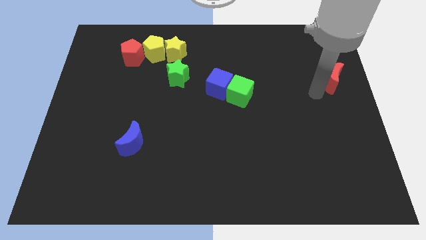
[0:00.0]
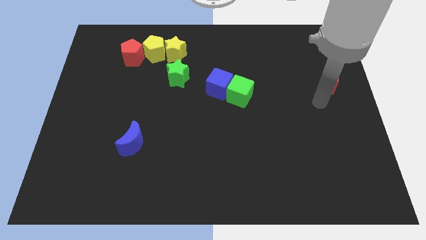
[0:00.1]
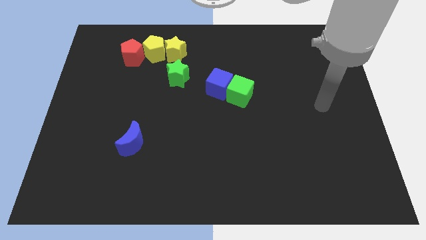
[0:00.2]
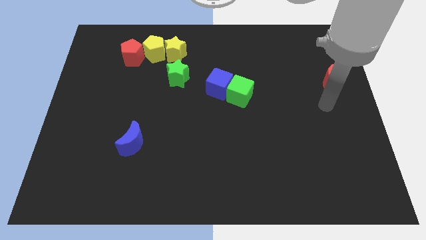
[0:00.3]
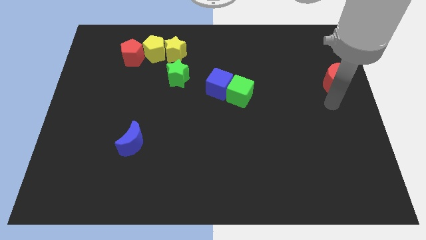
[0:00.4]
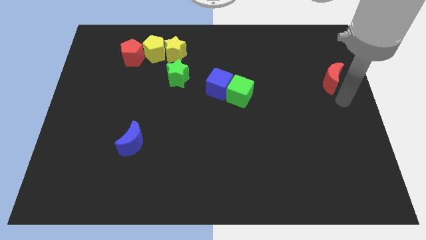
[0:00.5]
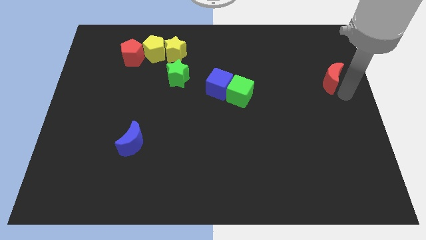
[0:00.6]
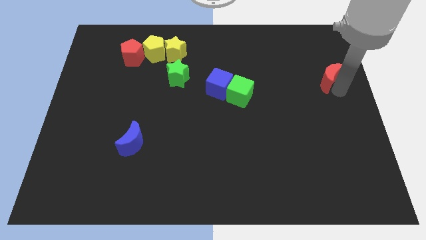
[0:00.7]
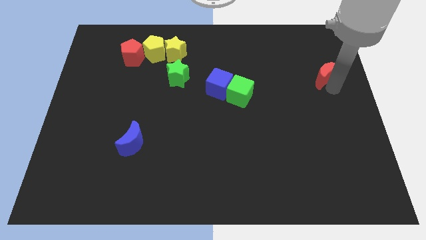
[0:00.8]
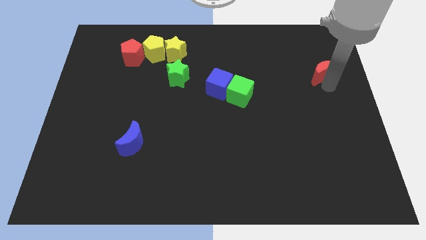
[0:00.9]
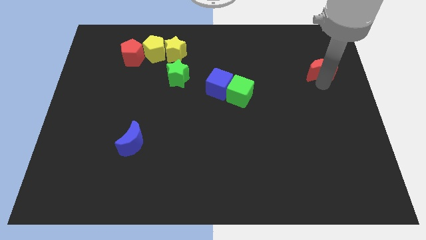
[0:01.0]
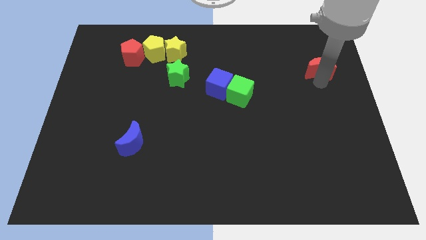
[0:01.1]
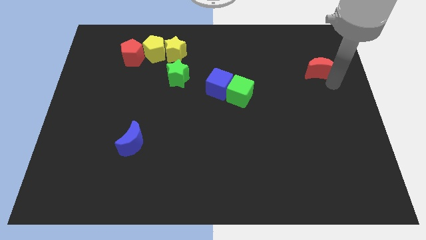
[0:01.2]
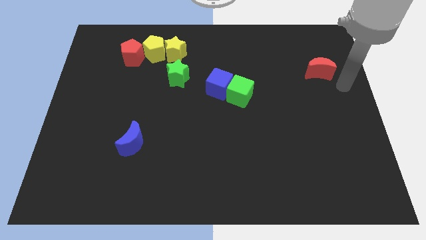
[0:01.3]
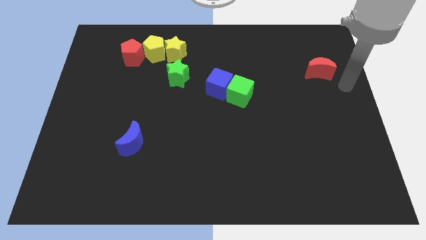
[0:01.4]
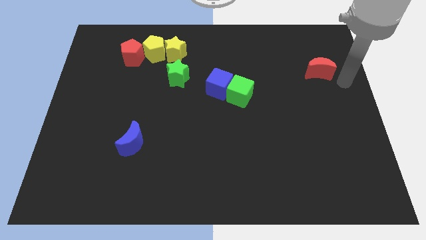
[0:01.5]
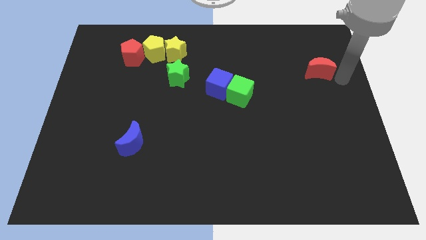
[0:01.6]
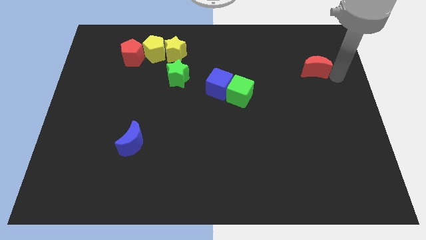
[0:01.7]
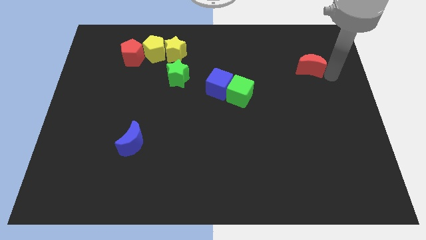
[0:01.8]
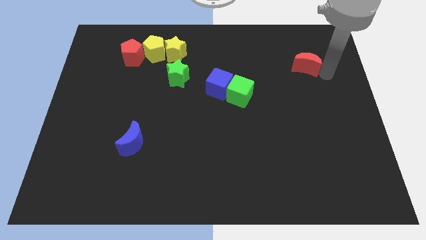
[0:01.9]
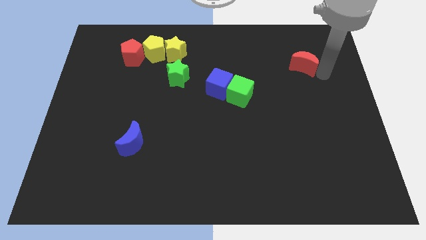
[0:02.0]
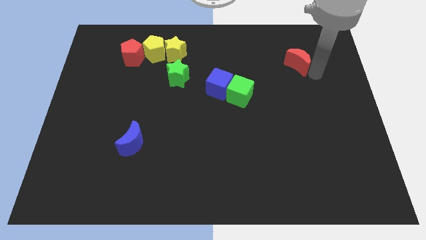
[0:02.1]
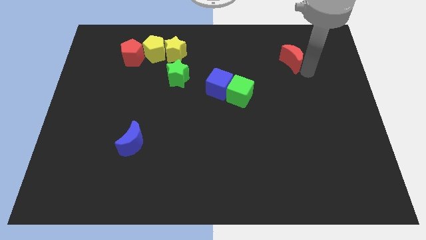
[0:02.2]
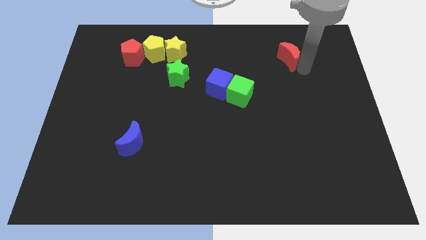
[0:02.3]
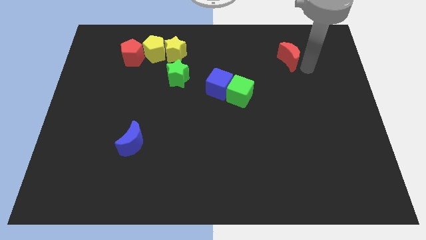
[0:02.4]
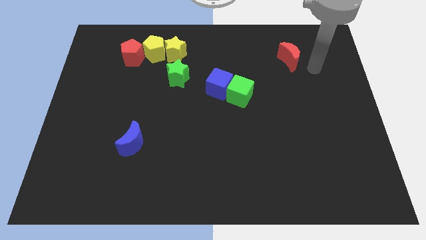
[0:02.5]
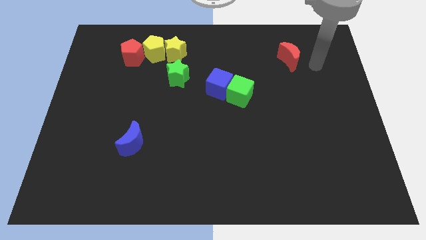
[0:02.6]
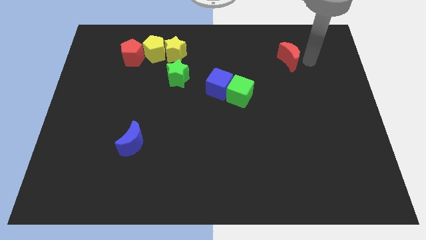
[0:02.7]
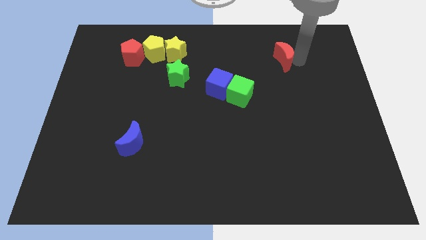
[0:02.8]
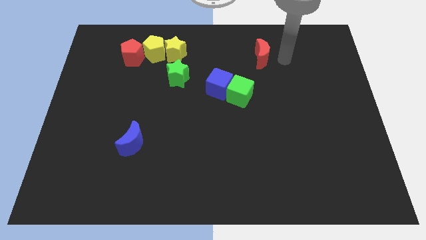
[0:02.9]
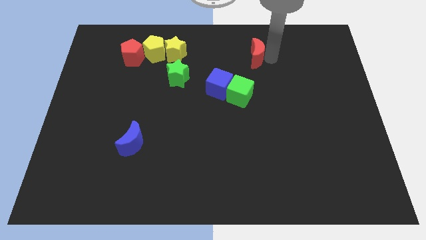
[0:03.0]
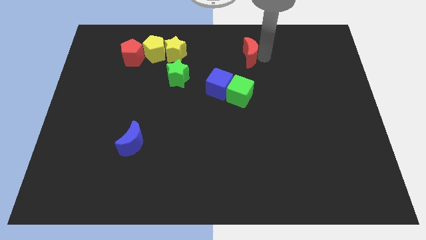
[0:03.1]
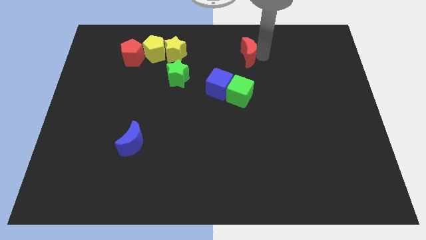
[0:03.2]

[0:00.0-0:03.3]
move the red moon on top of green cube

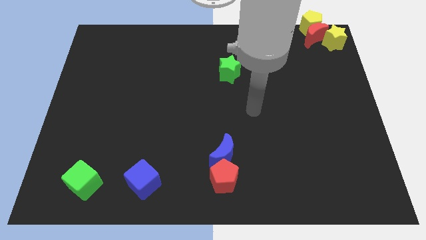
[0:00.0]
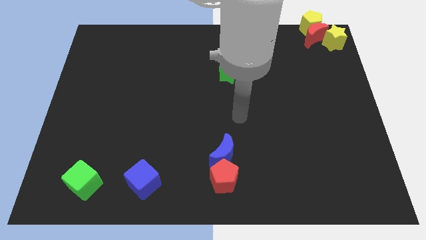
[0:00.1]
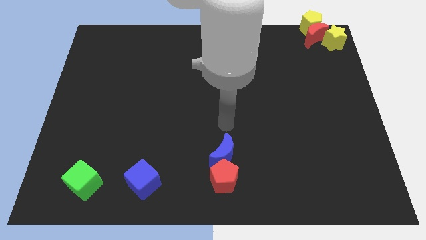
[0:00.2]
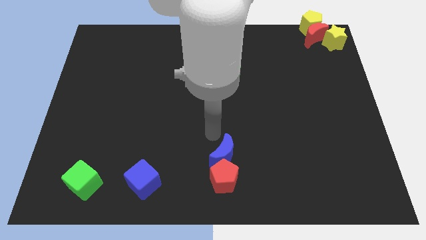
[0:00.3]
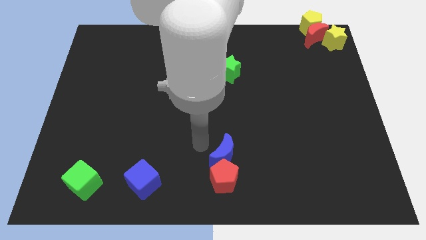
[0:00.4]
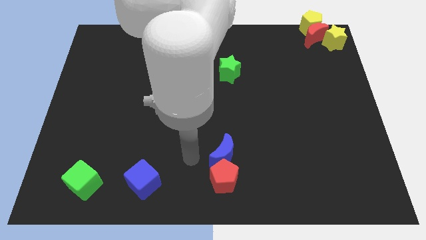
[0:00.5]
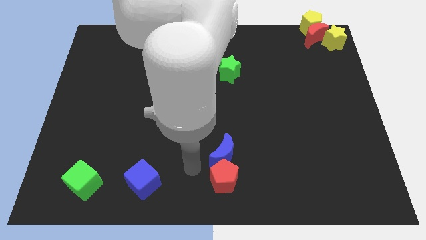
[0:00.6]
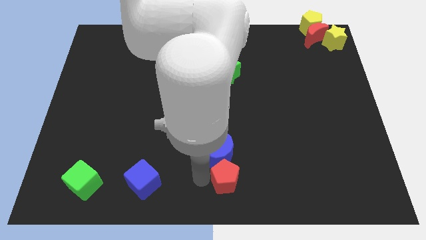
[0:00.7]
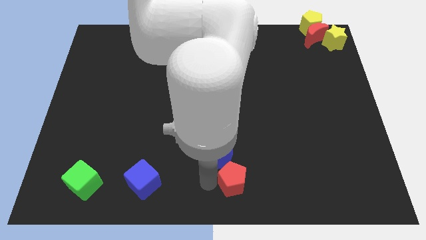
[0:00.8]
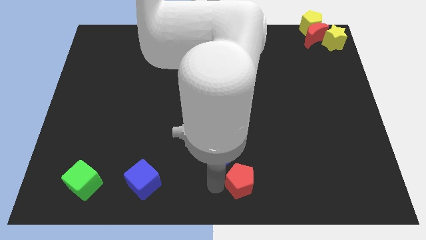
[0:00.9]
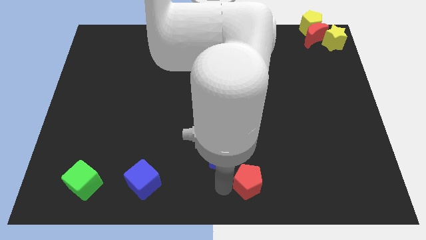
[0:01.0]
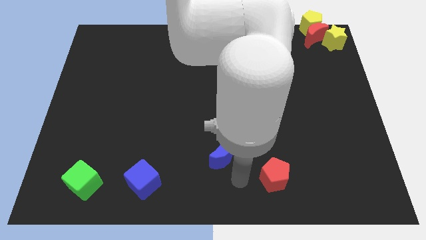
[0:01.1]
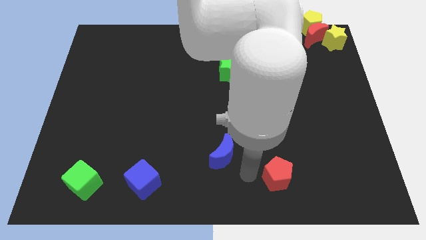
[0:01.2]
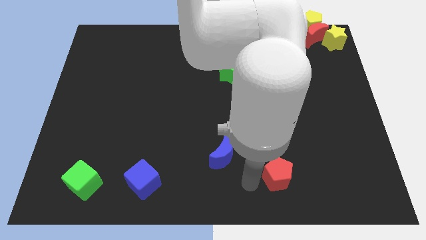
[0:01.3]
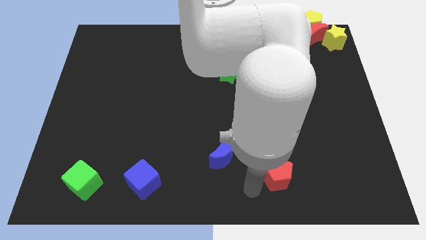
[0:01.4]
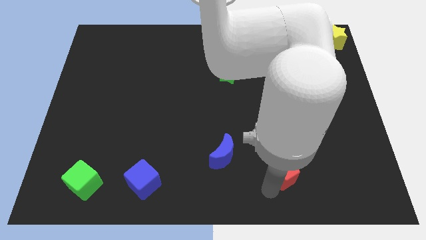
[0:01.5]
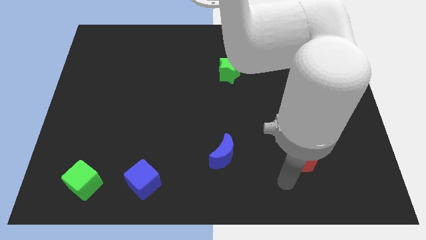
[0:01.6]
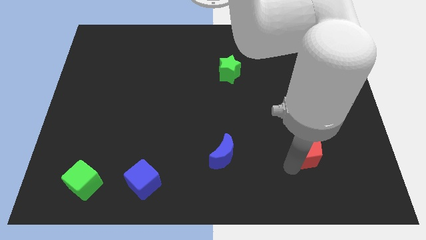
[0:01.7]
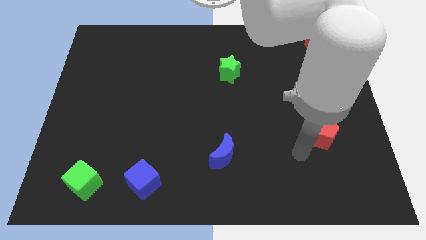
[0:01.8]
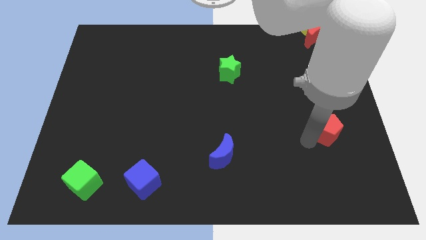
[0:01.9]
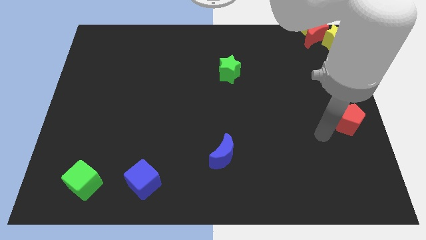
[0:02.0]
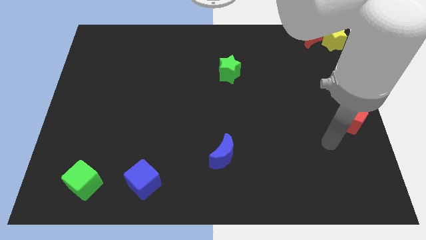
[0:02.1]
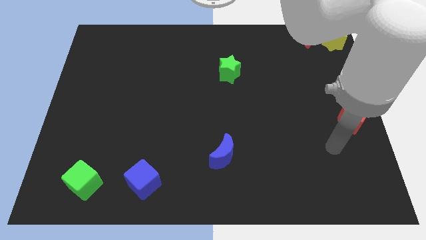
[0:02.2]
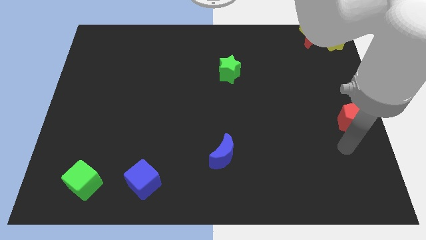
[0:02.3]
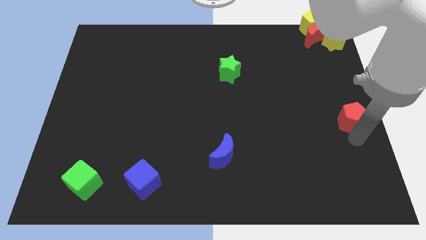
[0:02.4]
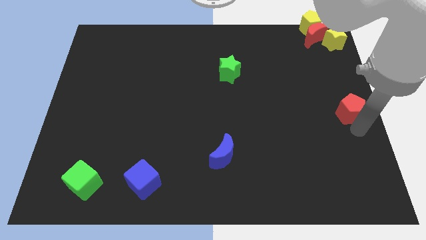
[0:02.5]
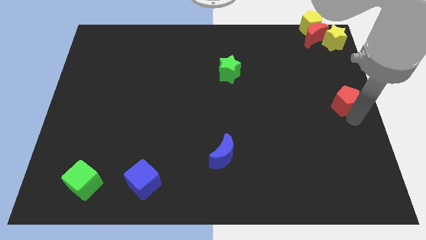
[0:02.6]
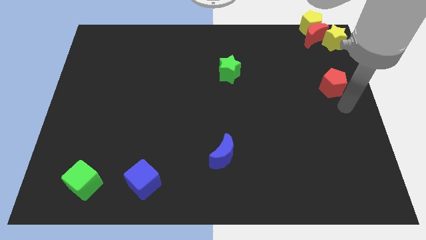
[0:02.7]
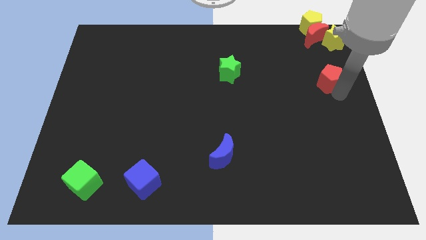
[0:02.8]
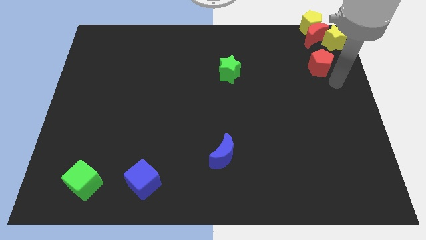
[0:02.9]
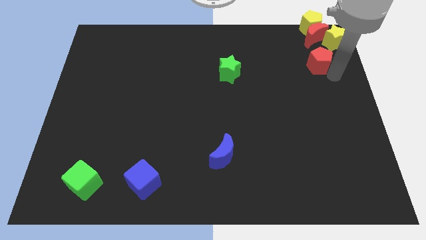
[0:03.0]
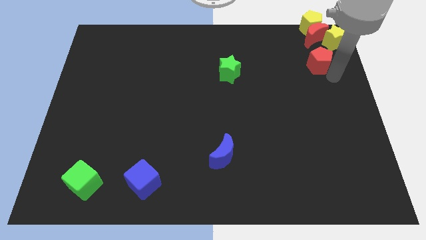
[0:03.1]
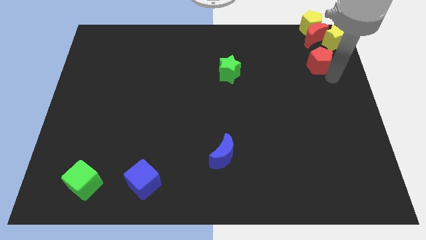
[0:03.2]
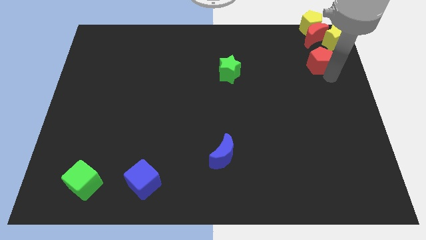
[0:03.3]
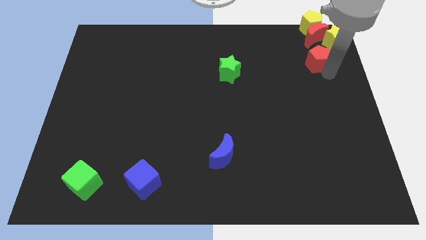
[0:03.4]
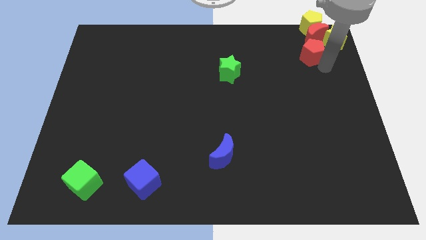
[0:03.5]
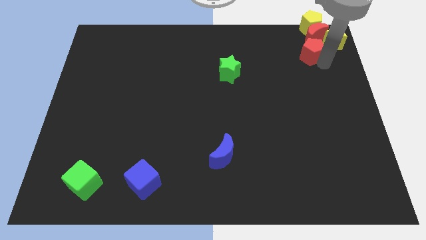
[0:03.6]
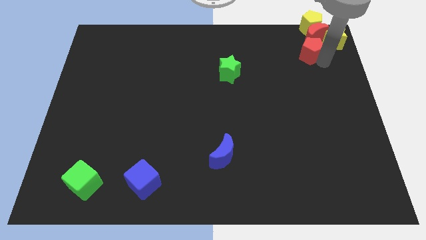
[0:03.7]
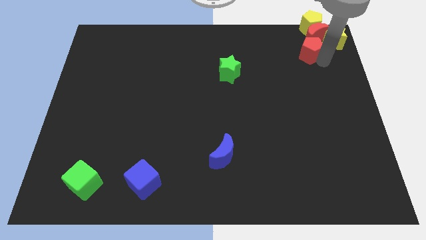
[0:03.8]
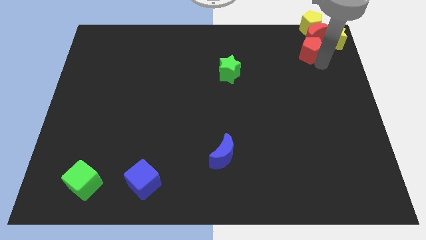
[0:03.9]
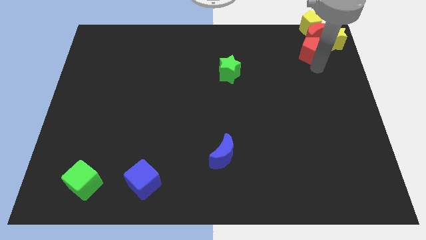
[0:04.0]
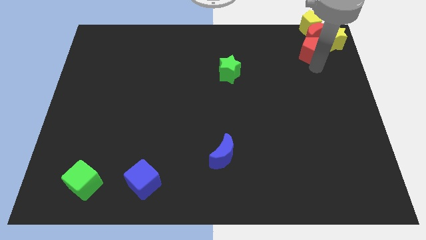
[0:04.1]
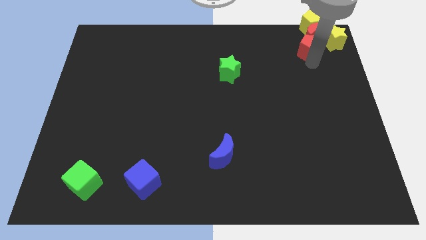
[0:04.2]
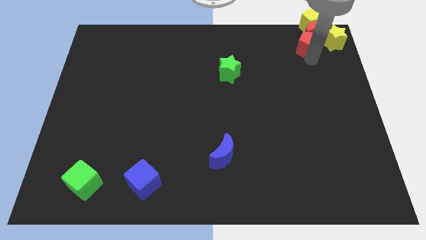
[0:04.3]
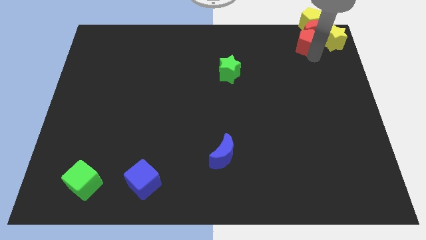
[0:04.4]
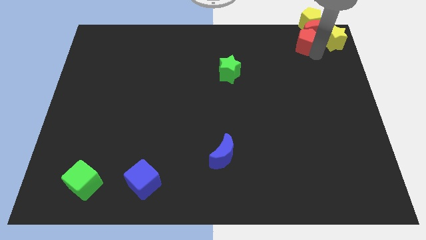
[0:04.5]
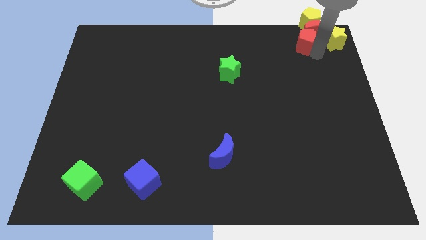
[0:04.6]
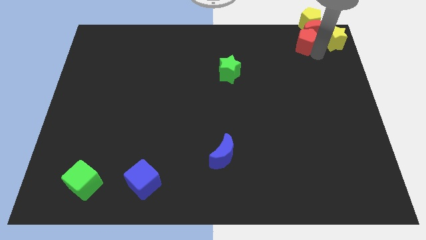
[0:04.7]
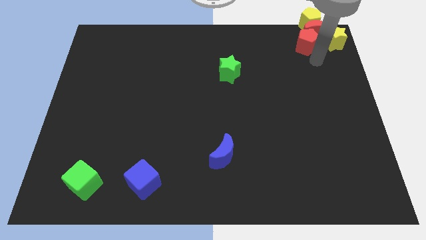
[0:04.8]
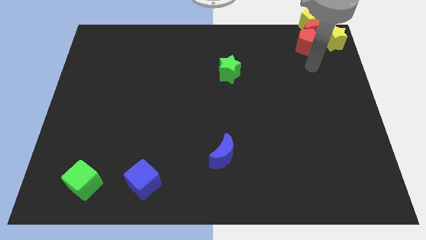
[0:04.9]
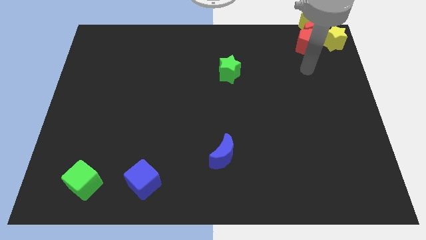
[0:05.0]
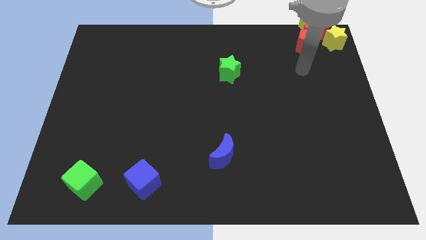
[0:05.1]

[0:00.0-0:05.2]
push the red pentagon towards red crescent

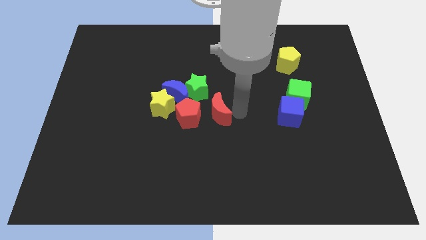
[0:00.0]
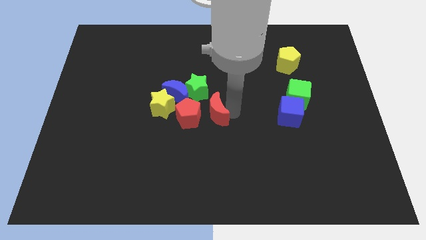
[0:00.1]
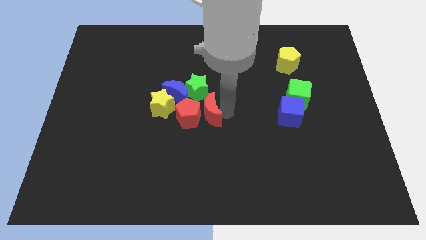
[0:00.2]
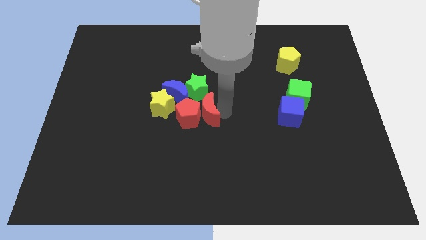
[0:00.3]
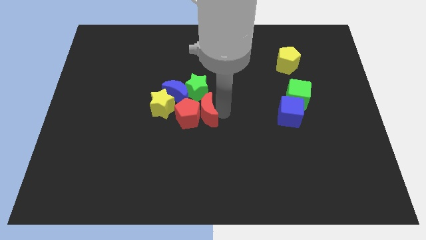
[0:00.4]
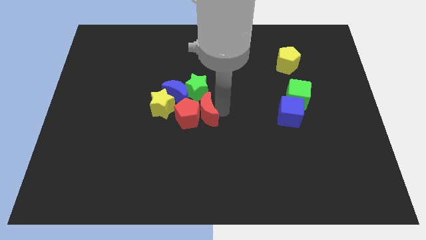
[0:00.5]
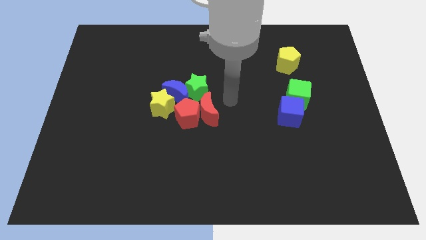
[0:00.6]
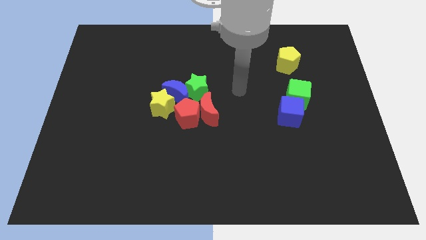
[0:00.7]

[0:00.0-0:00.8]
push red moon towards red pentagon
